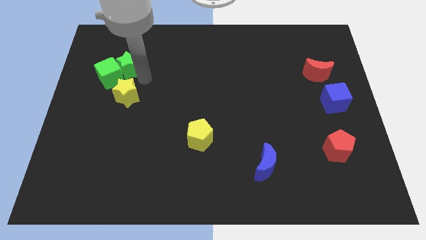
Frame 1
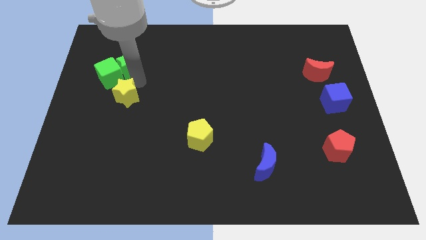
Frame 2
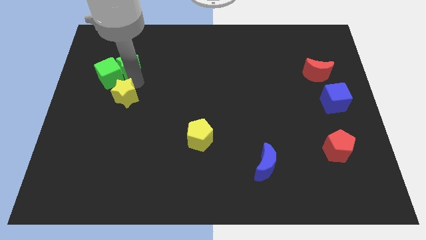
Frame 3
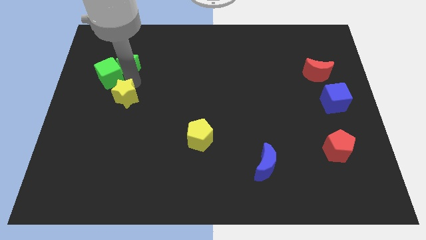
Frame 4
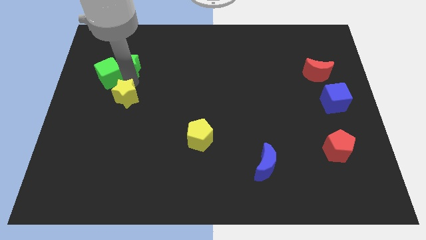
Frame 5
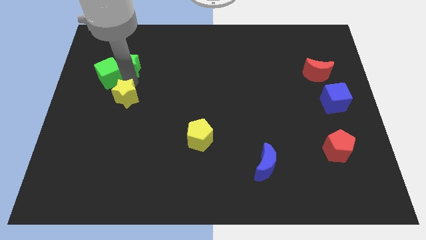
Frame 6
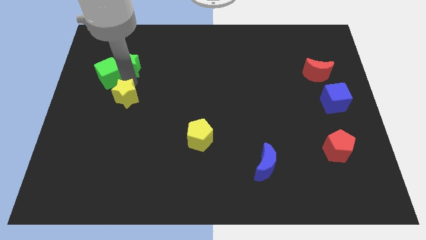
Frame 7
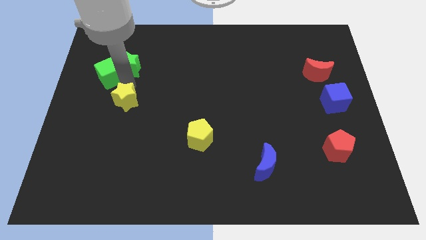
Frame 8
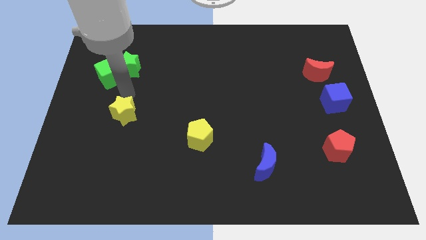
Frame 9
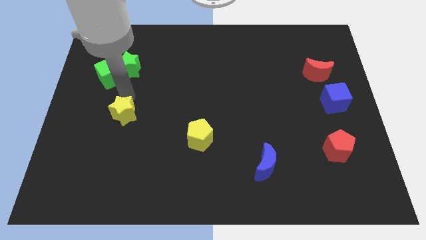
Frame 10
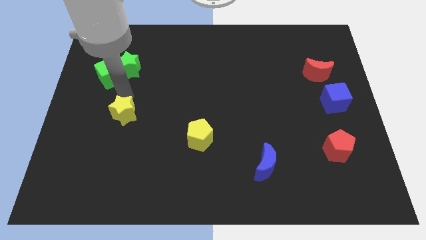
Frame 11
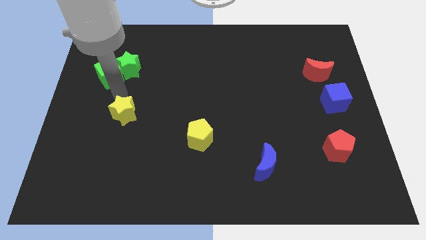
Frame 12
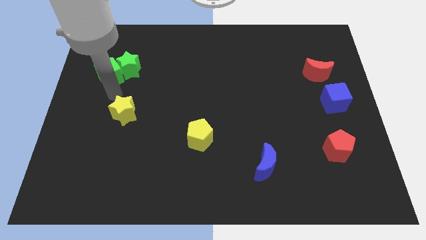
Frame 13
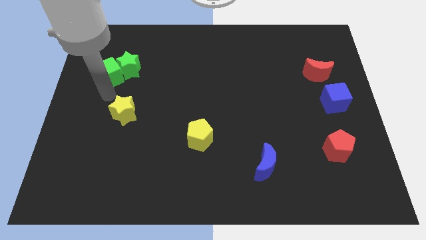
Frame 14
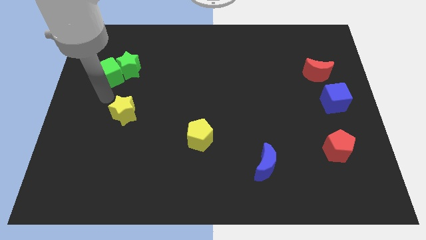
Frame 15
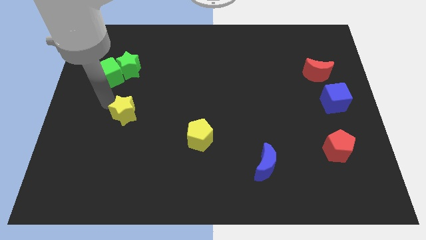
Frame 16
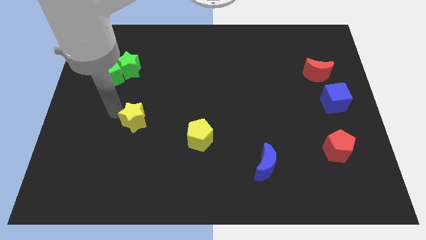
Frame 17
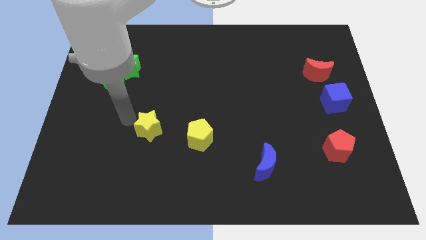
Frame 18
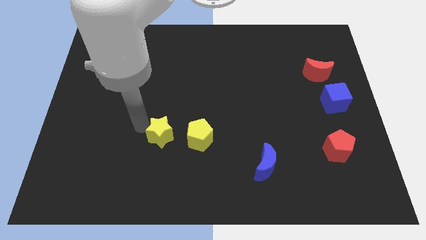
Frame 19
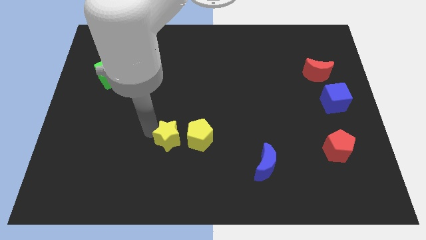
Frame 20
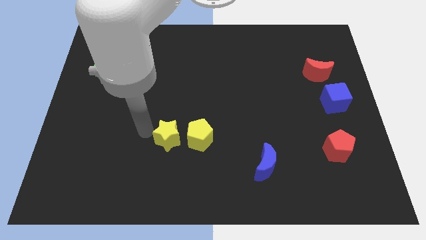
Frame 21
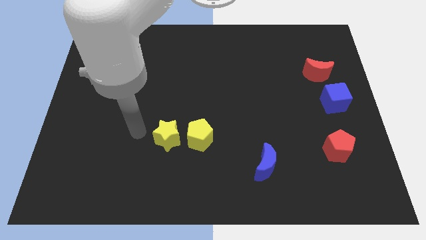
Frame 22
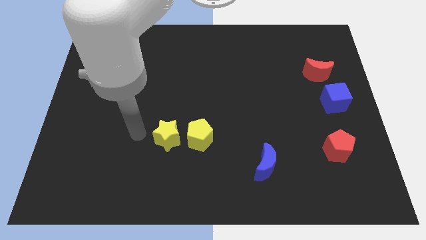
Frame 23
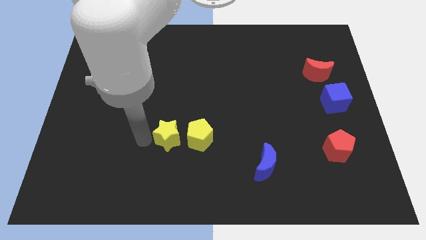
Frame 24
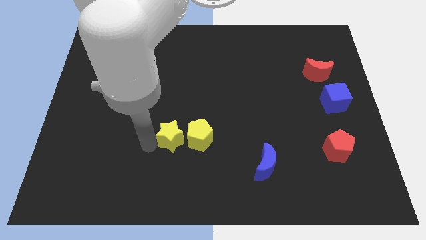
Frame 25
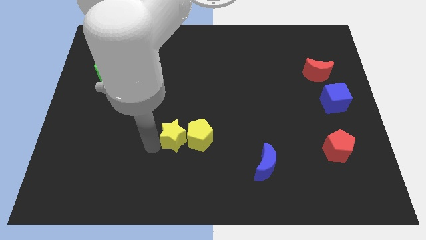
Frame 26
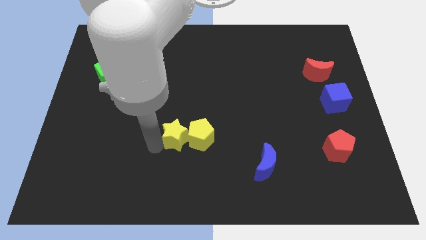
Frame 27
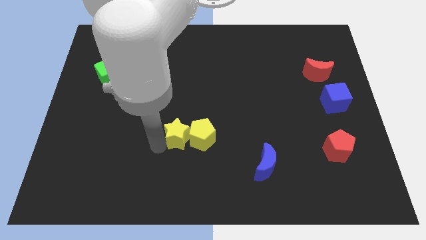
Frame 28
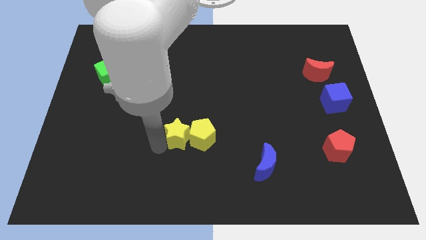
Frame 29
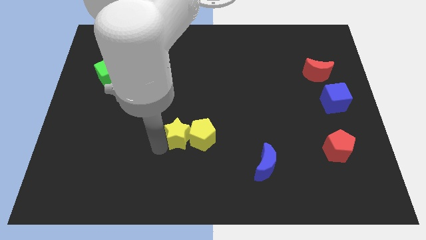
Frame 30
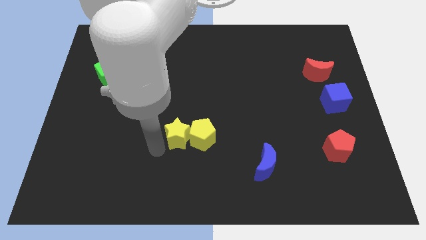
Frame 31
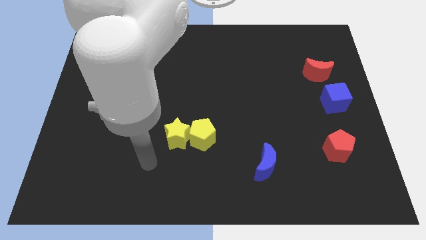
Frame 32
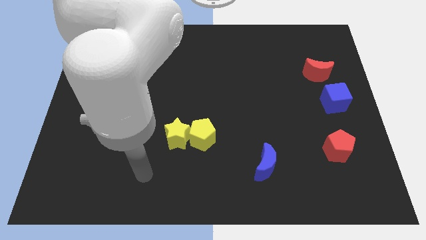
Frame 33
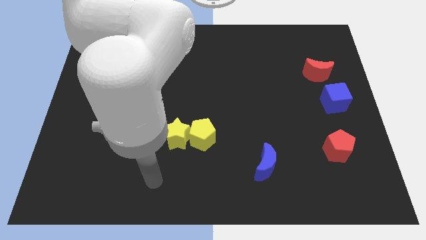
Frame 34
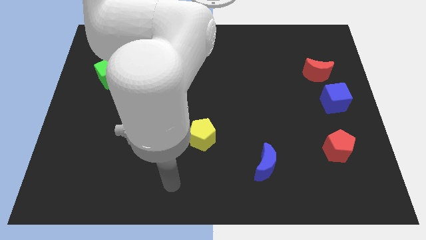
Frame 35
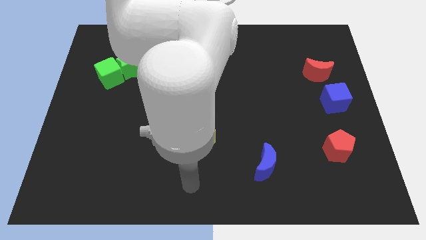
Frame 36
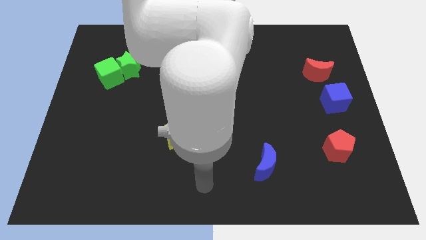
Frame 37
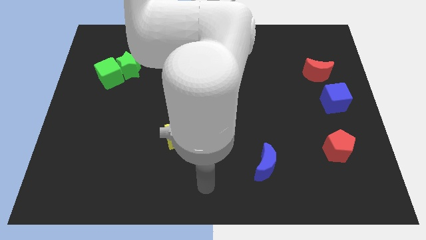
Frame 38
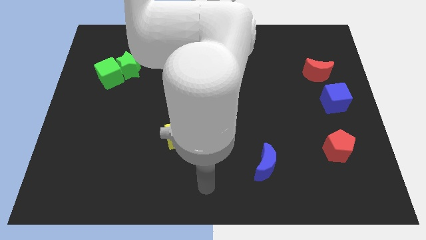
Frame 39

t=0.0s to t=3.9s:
push the yellow star to the left of the yellow pentagon

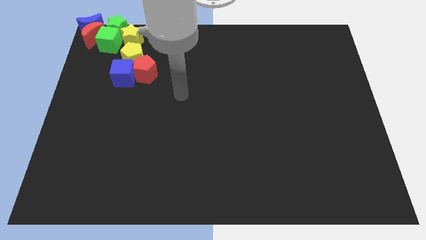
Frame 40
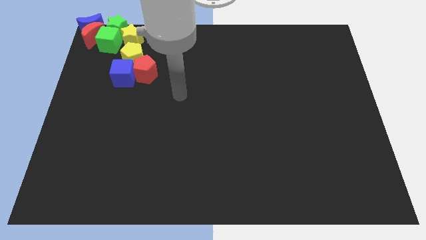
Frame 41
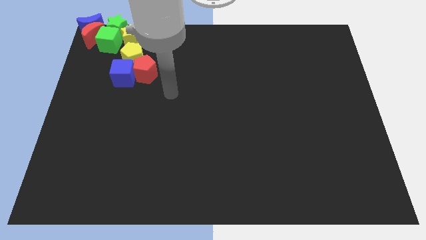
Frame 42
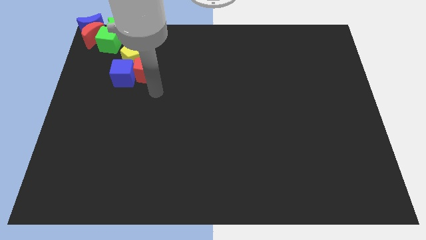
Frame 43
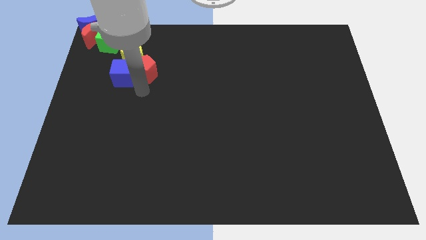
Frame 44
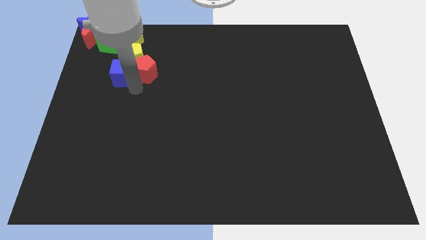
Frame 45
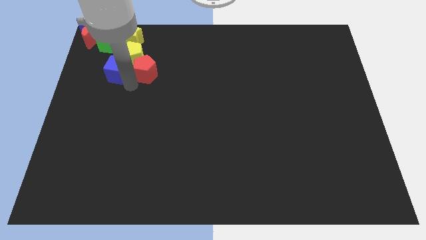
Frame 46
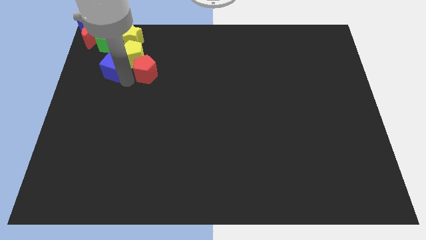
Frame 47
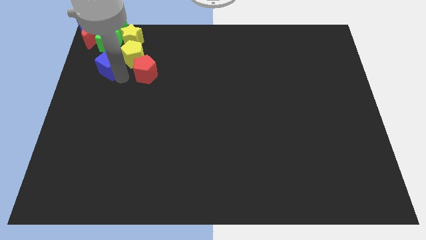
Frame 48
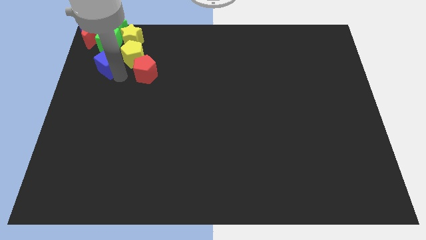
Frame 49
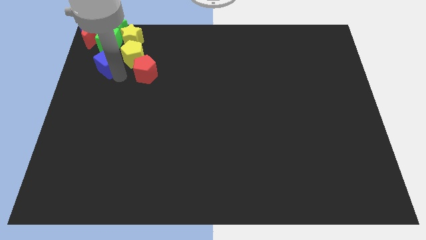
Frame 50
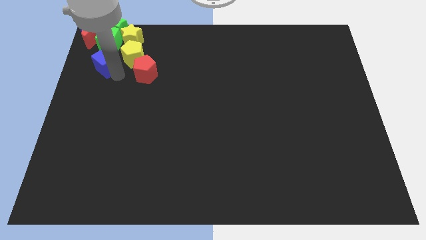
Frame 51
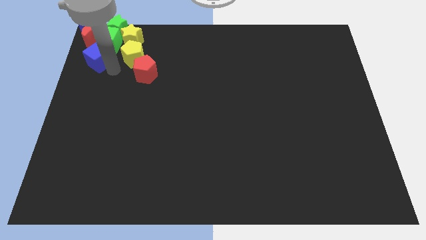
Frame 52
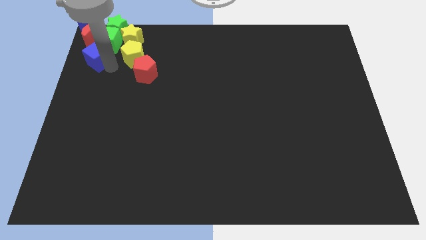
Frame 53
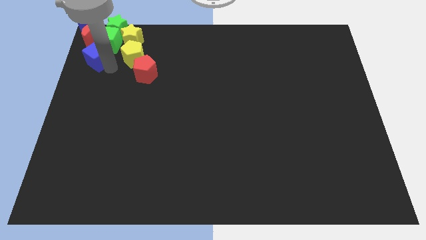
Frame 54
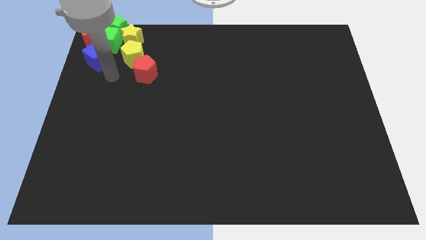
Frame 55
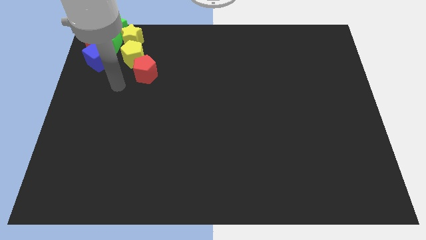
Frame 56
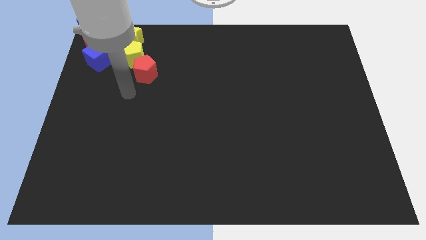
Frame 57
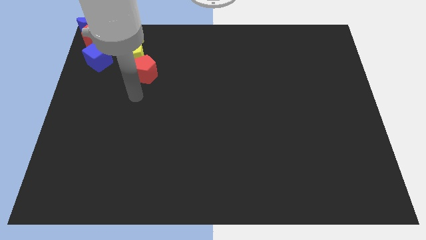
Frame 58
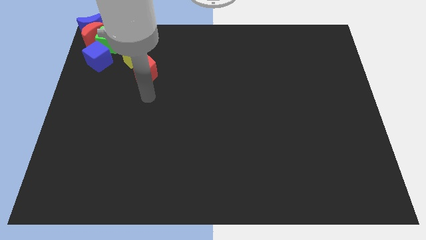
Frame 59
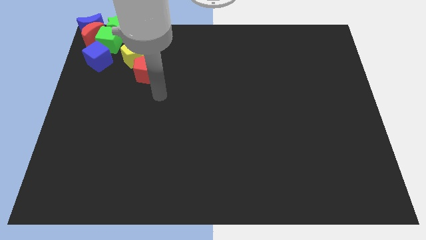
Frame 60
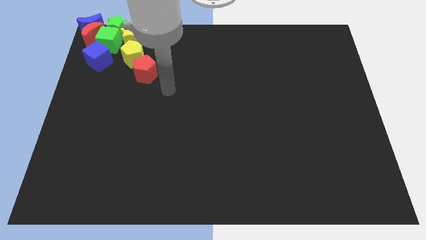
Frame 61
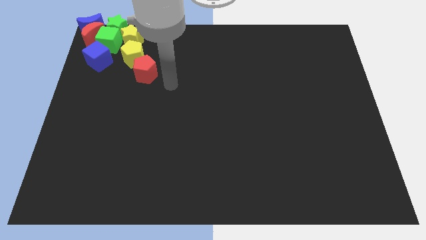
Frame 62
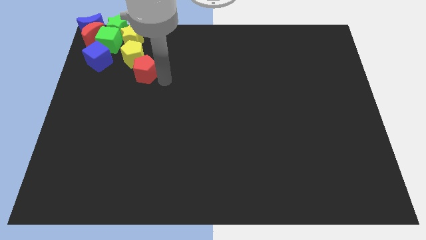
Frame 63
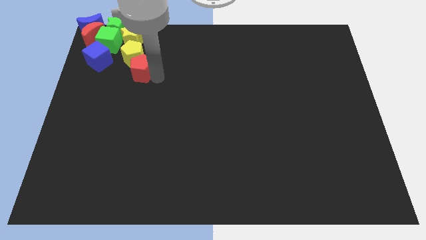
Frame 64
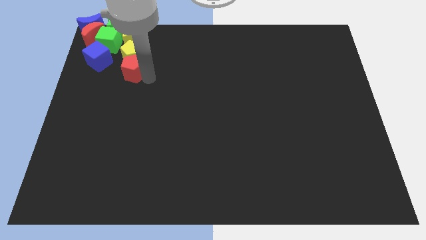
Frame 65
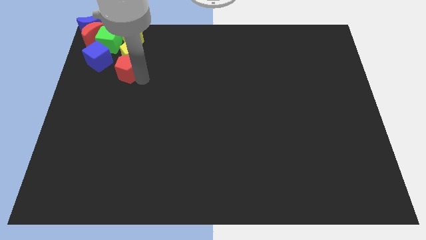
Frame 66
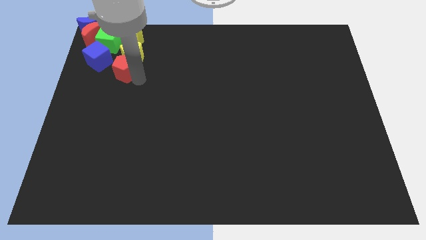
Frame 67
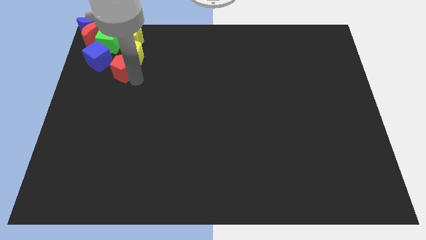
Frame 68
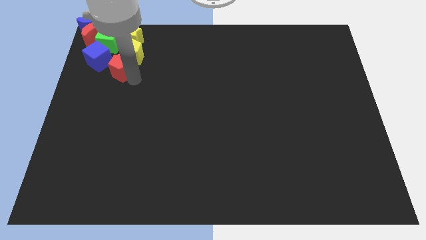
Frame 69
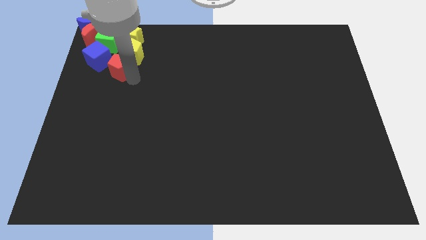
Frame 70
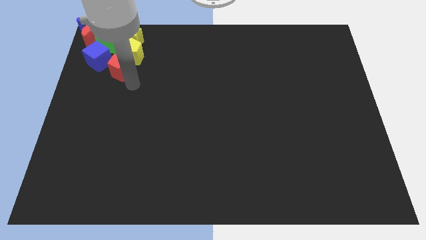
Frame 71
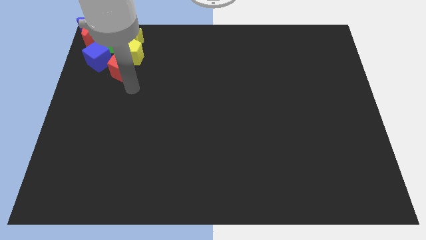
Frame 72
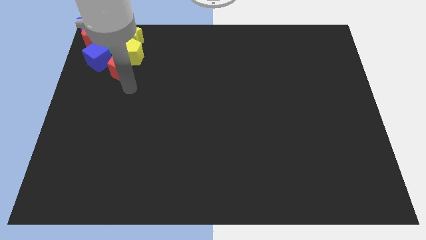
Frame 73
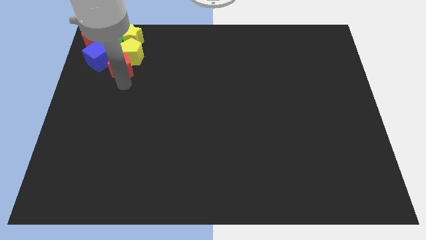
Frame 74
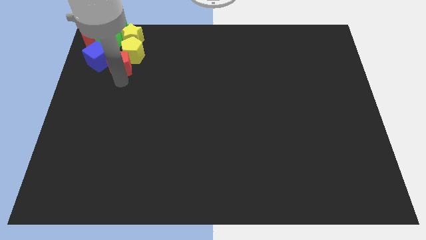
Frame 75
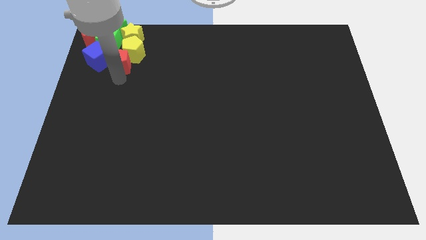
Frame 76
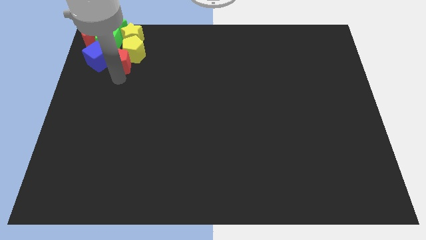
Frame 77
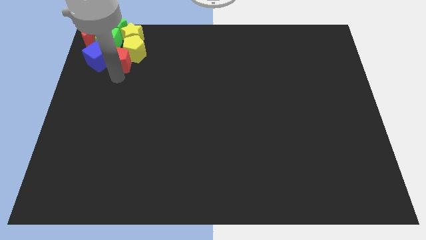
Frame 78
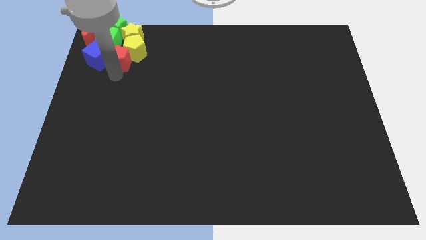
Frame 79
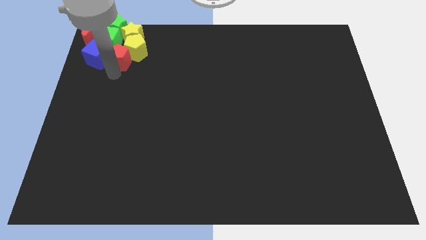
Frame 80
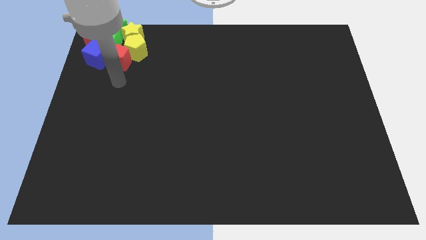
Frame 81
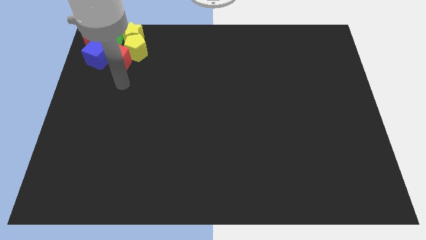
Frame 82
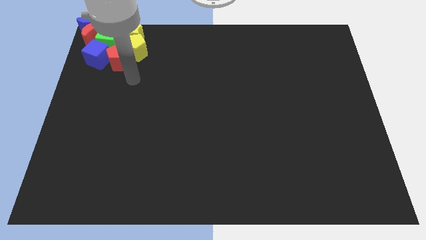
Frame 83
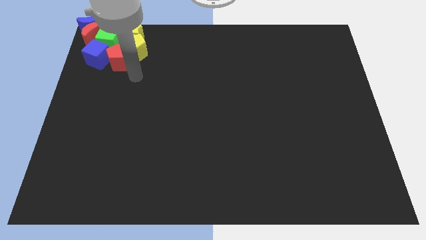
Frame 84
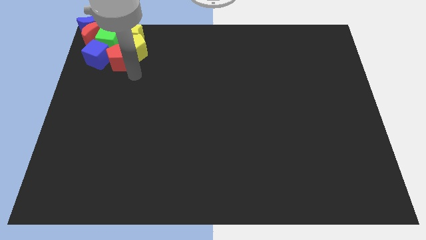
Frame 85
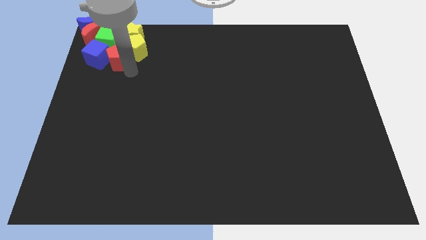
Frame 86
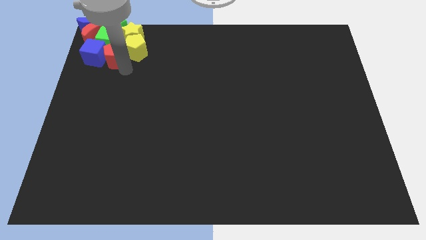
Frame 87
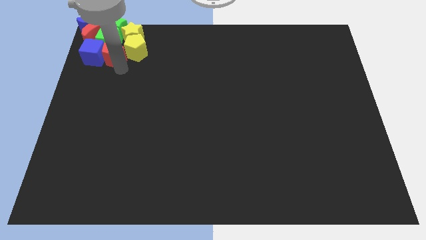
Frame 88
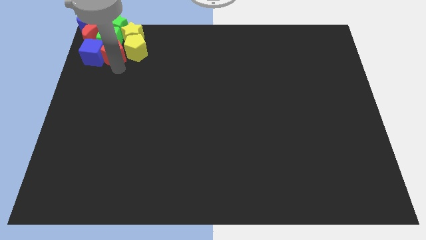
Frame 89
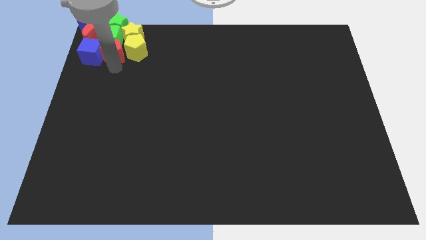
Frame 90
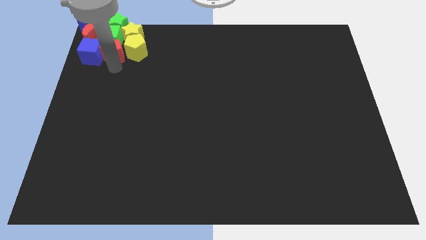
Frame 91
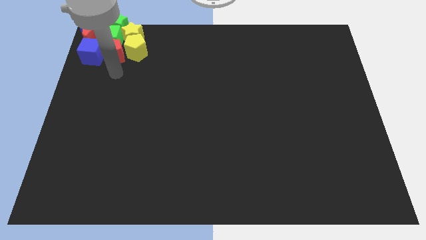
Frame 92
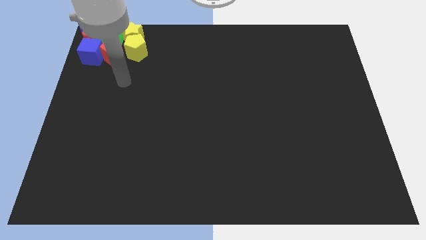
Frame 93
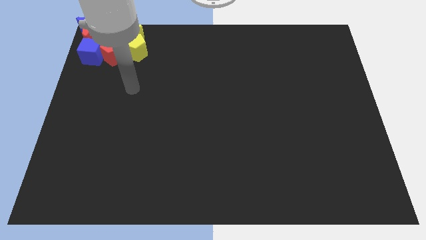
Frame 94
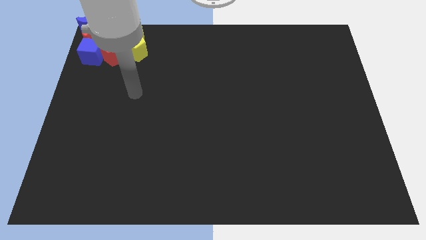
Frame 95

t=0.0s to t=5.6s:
push the red pentagon into the blue cube
